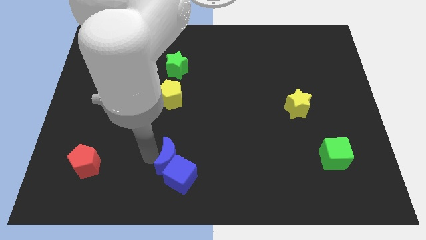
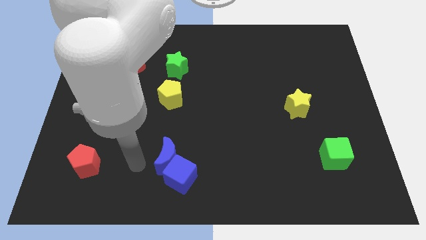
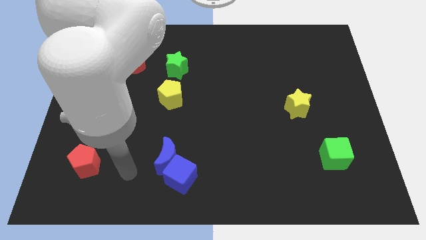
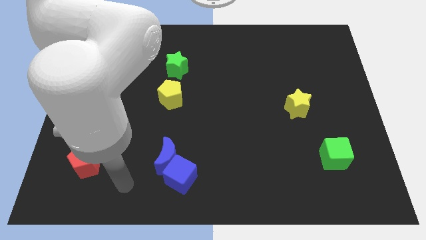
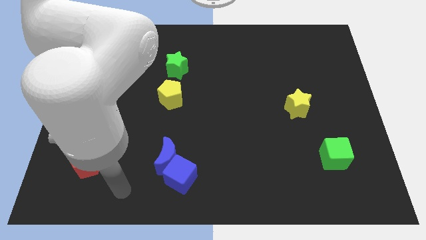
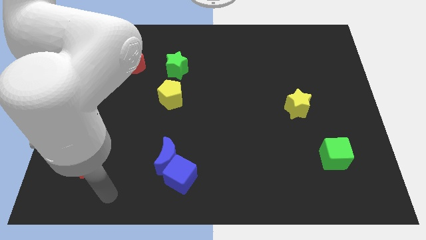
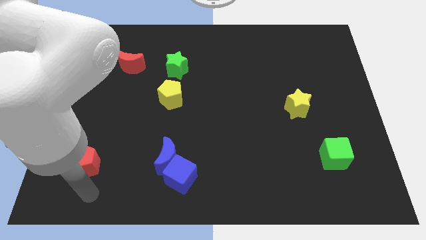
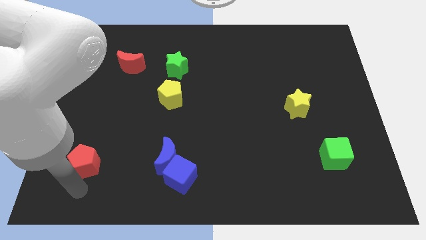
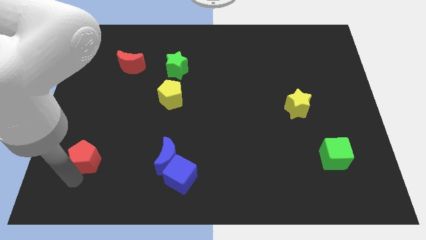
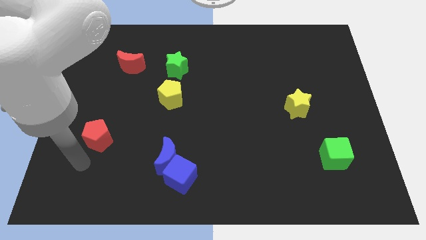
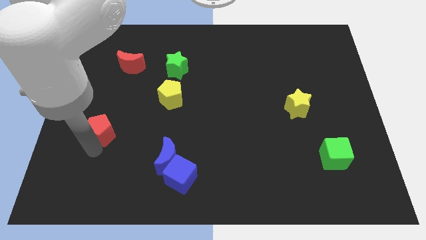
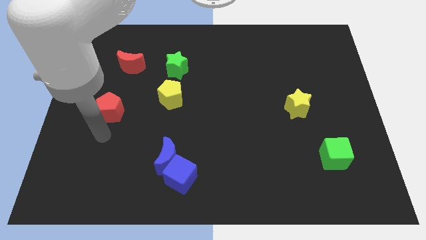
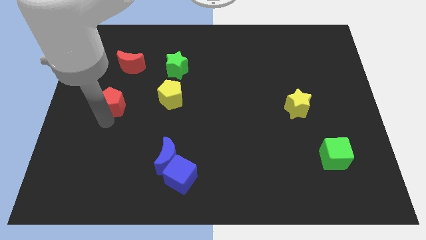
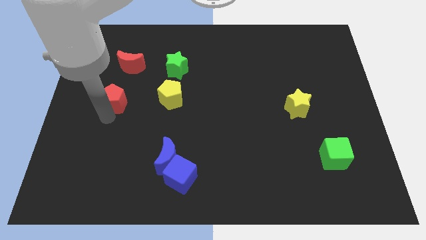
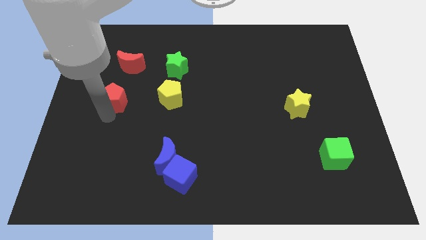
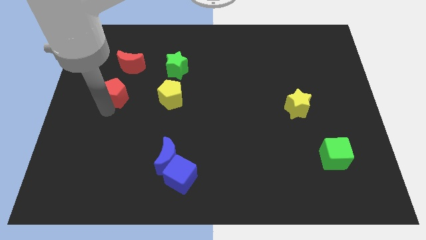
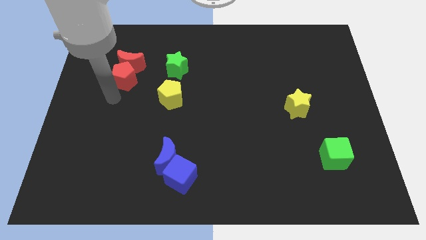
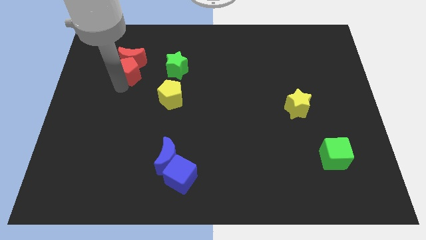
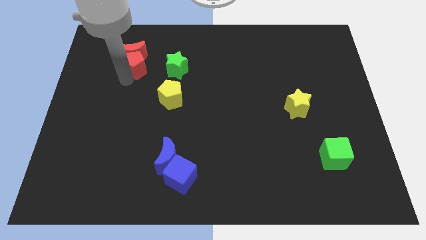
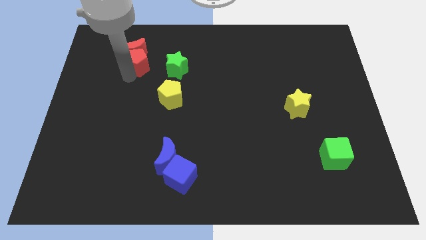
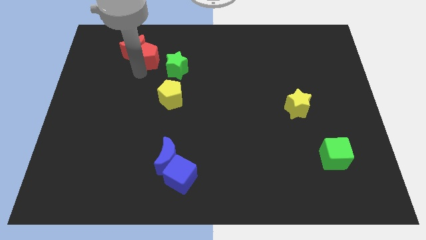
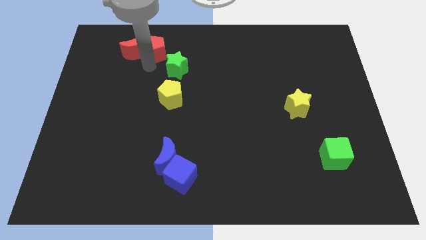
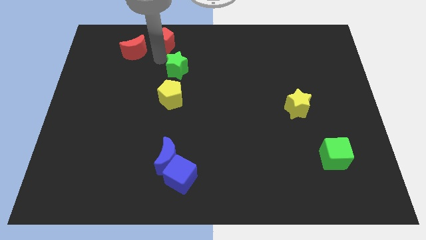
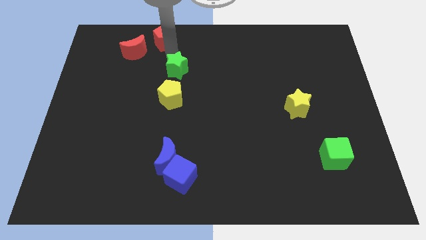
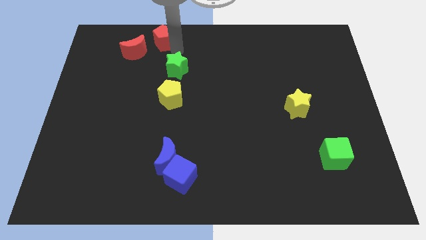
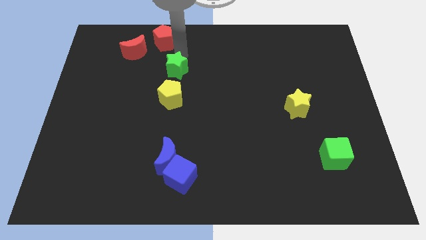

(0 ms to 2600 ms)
place red blocks at the top left of the board

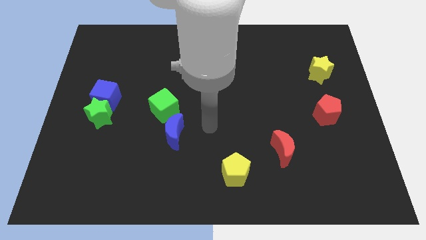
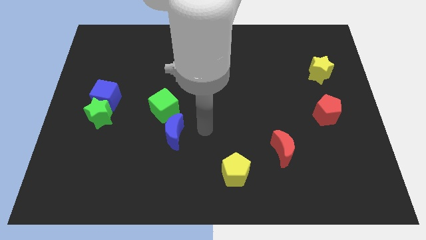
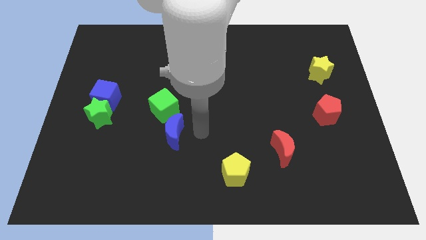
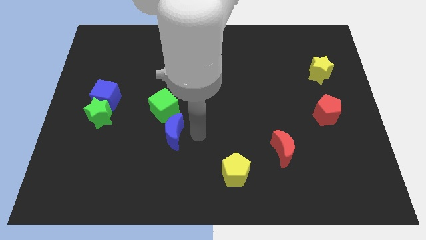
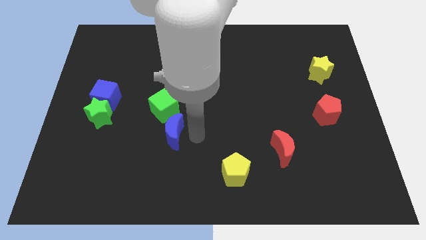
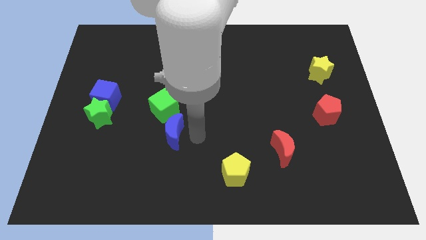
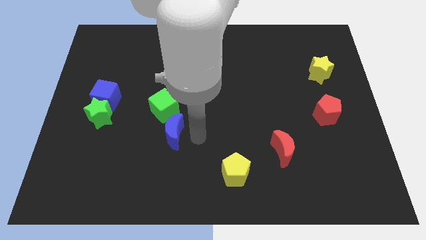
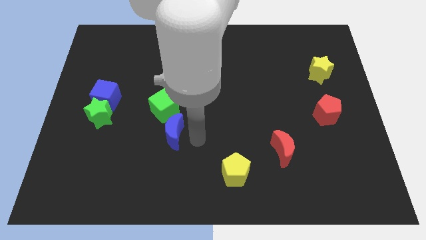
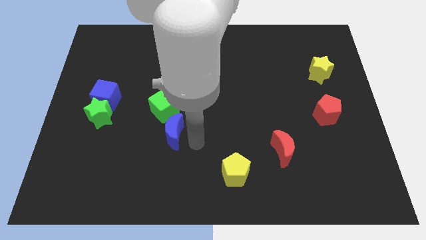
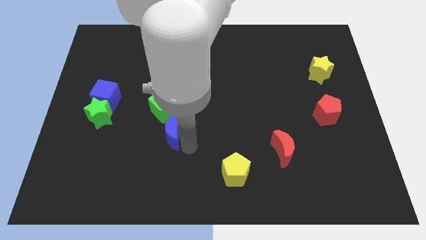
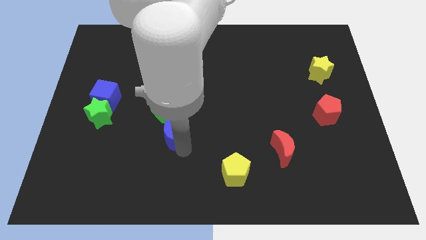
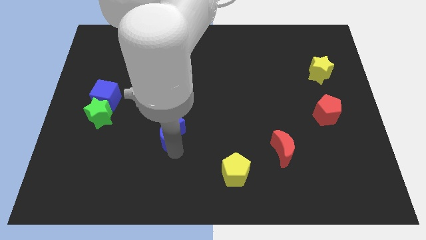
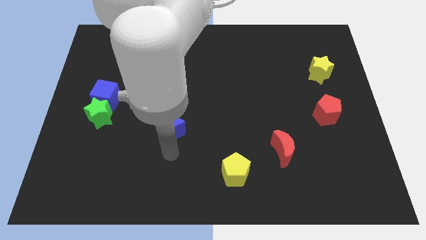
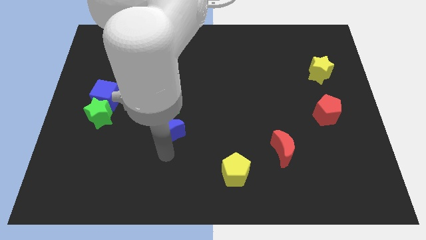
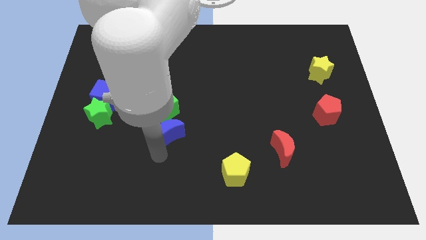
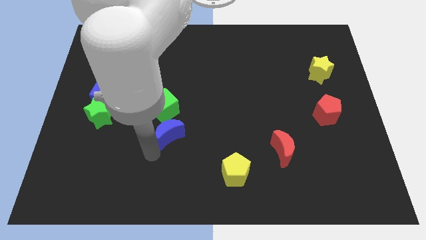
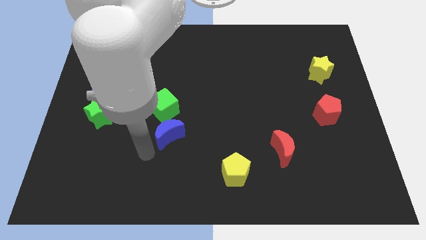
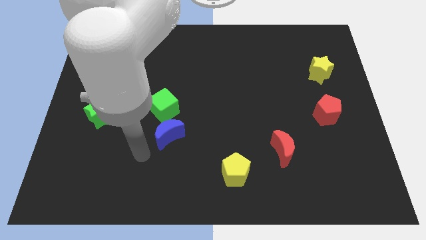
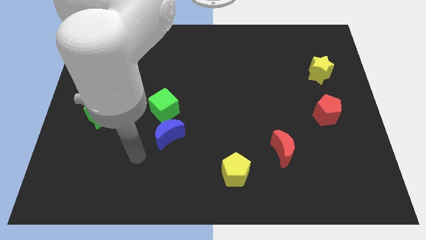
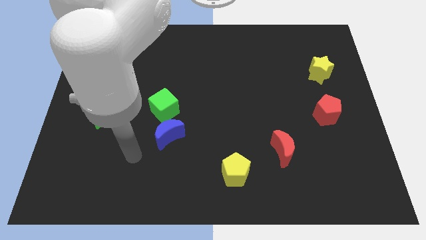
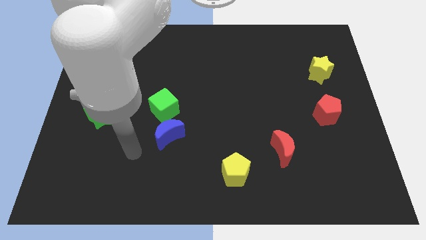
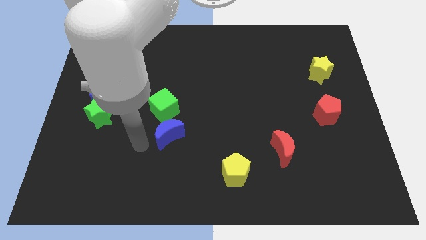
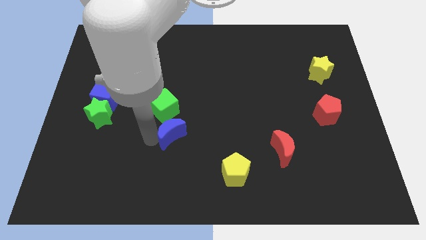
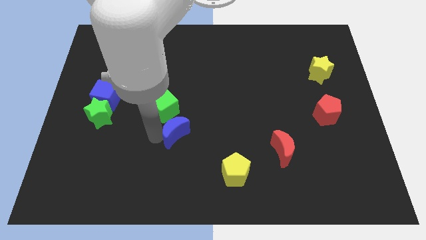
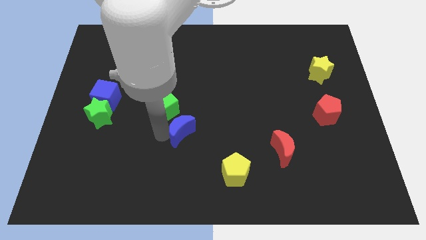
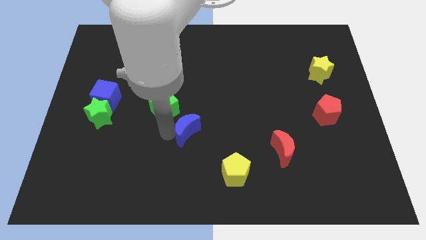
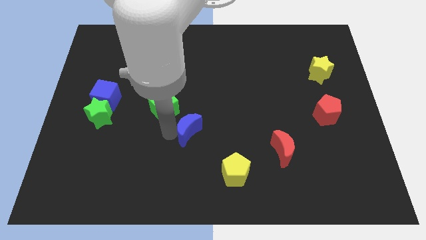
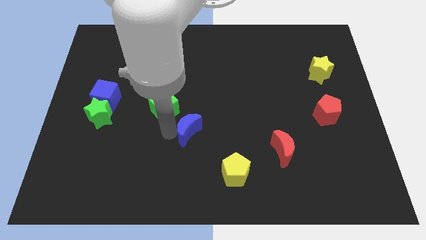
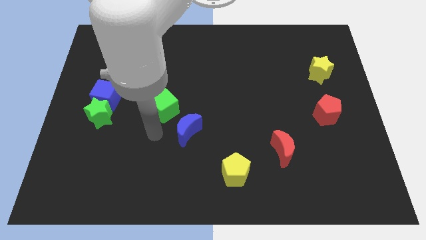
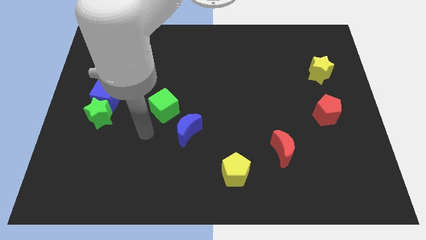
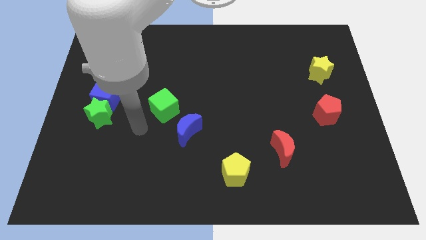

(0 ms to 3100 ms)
separate blue moon from green cube

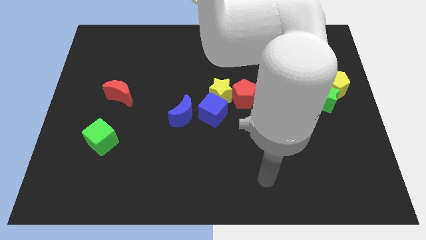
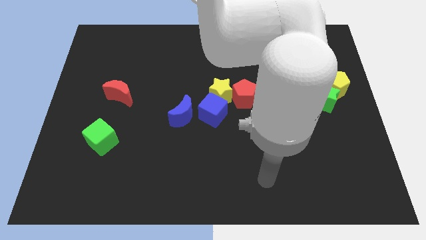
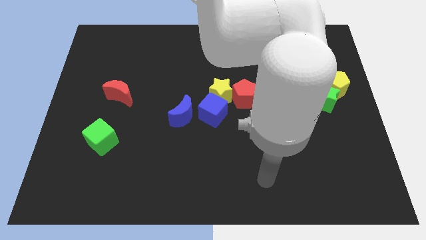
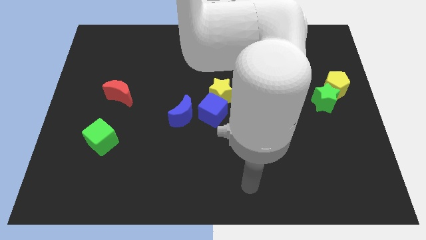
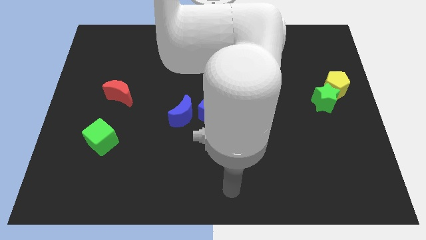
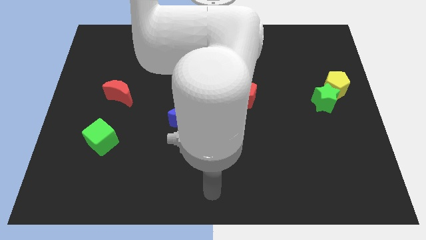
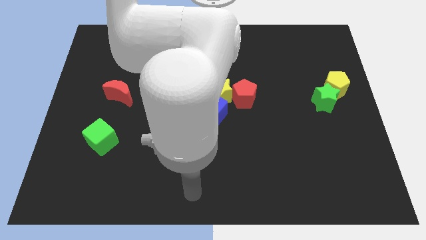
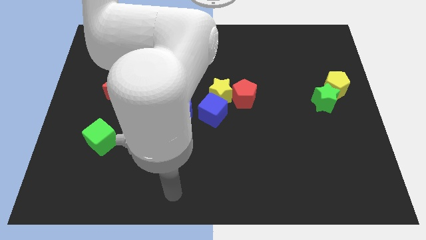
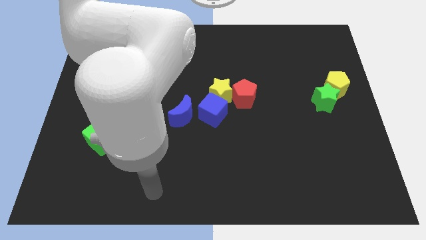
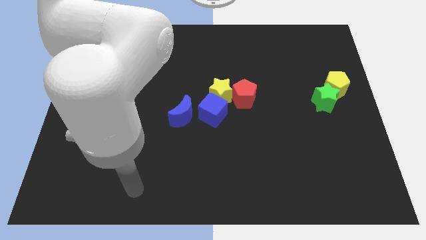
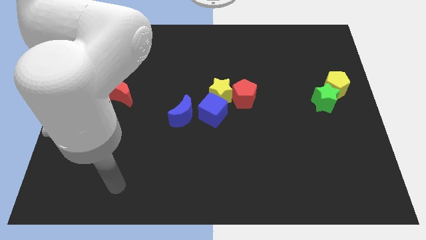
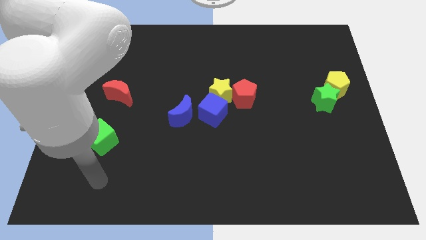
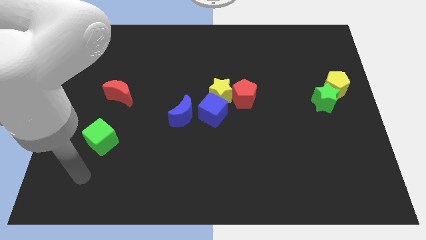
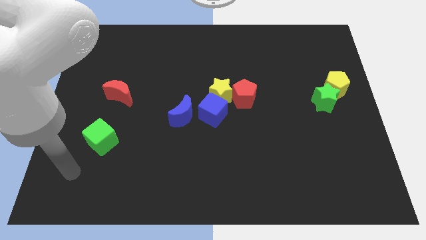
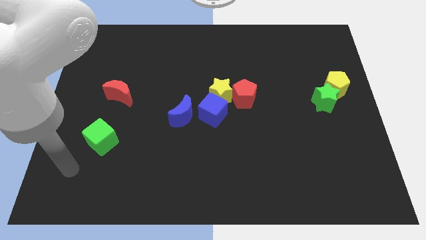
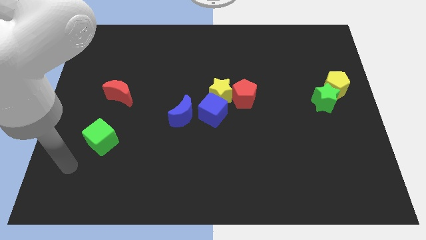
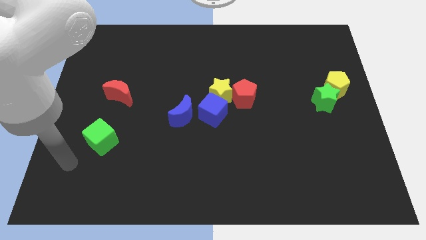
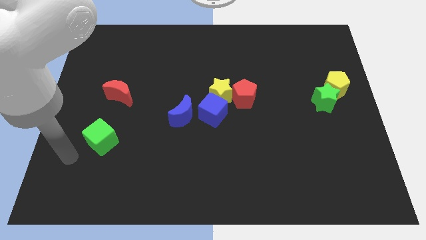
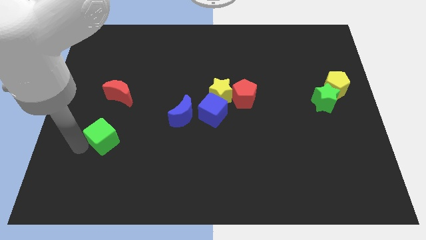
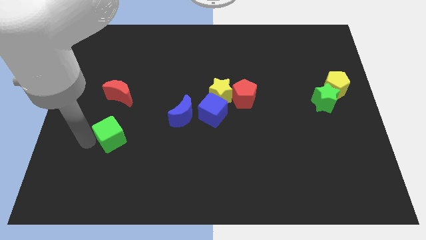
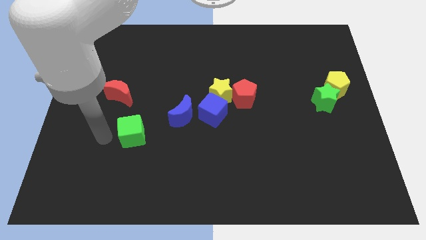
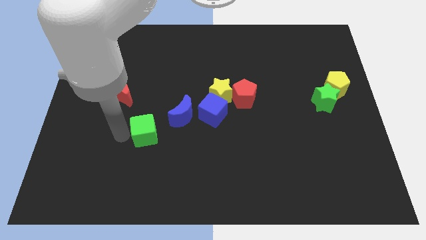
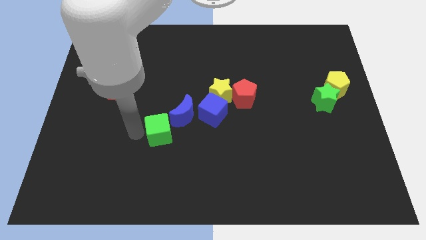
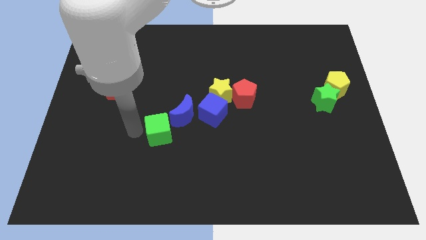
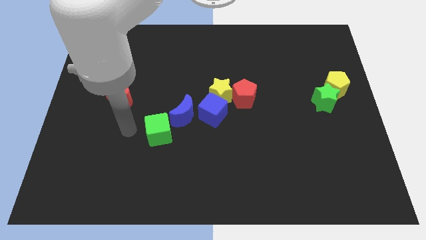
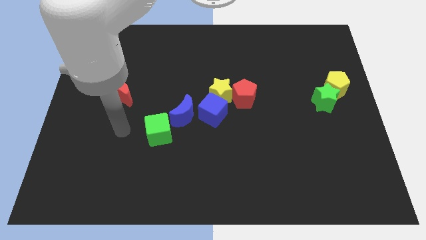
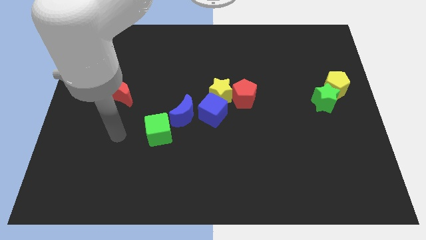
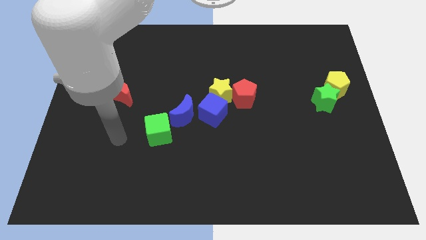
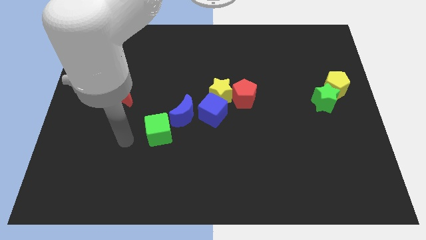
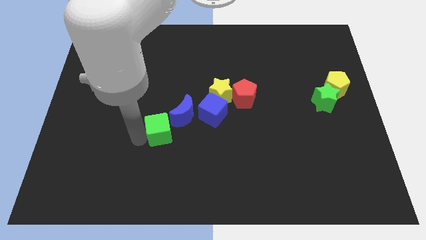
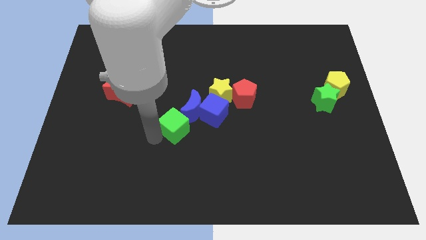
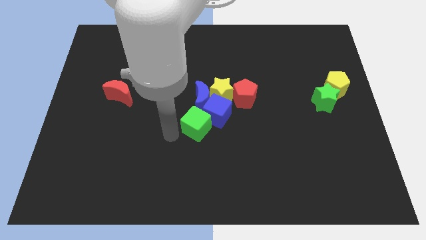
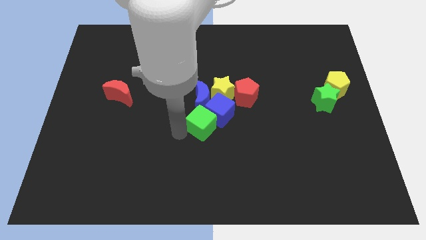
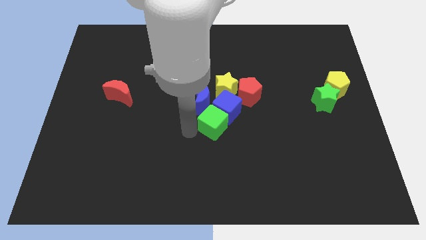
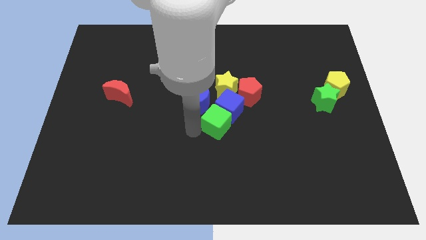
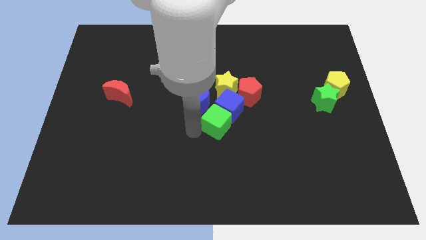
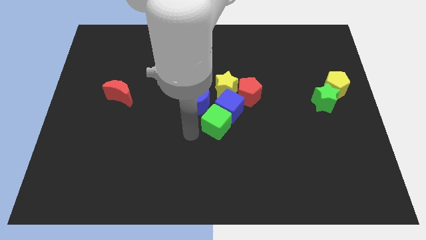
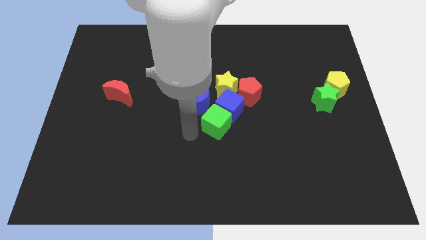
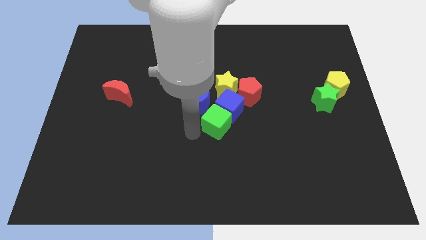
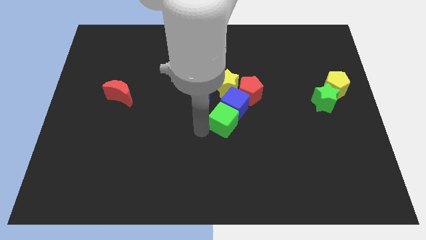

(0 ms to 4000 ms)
push green cube into blue cube
